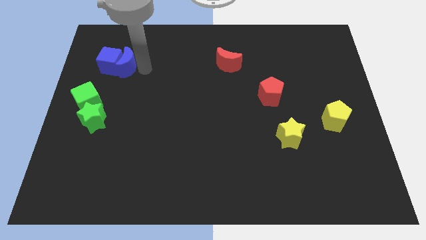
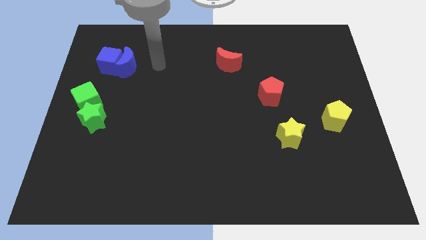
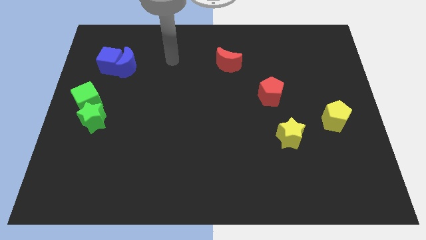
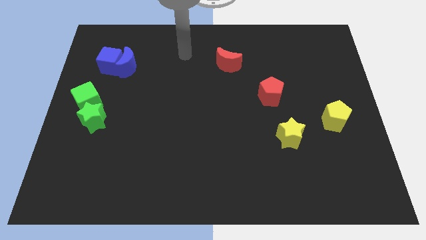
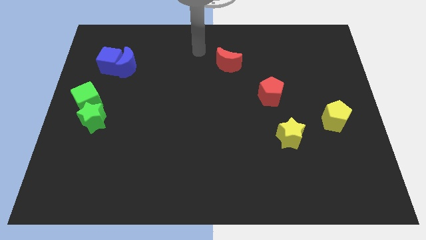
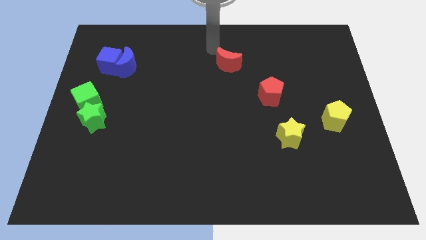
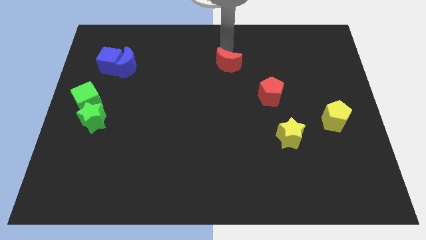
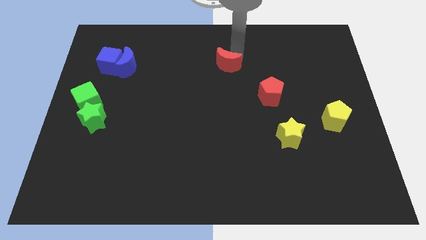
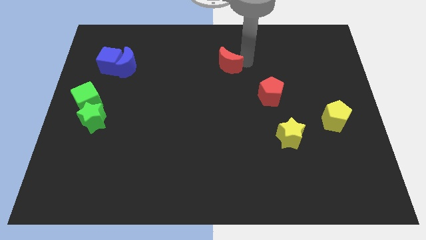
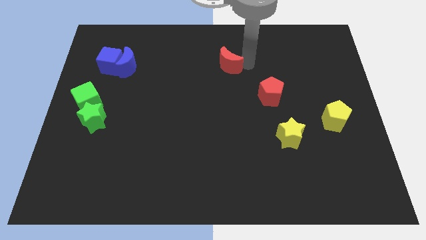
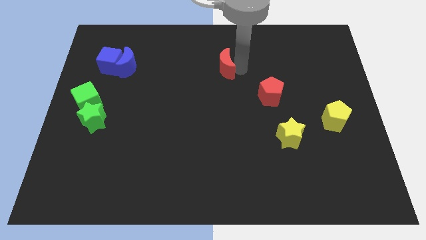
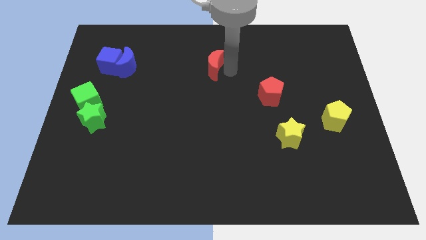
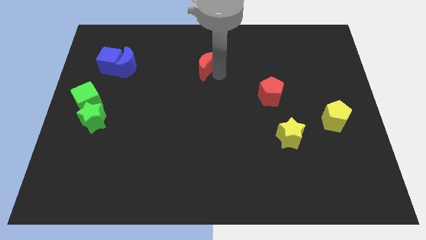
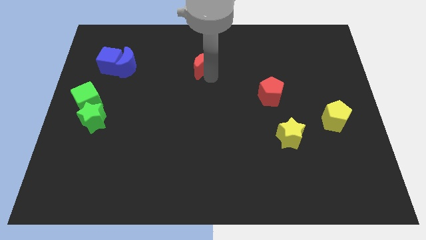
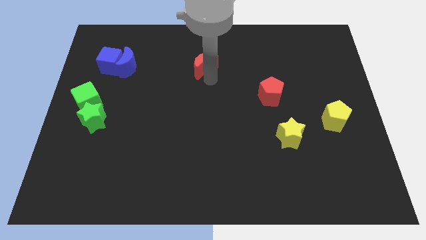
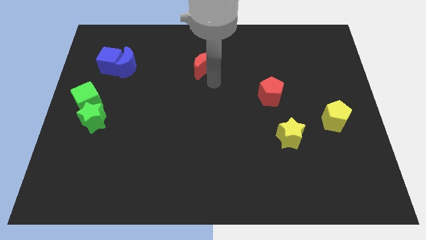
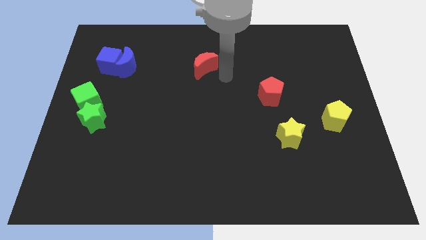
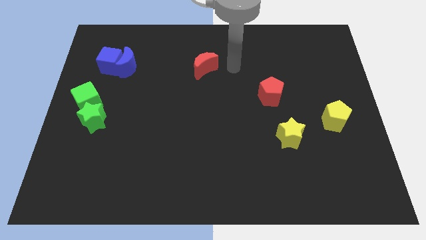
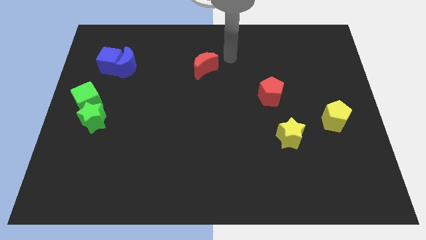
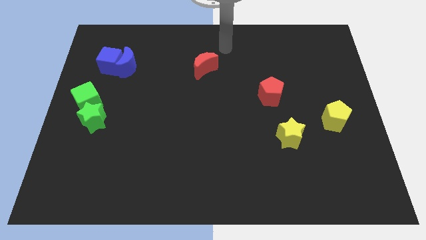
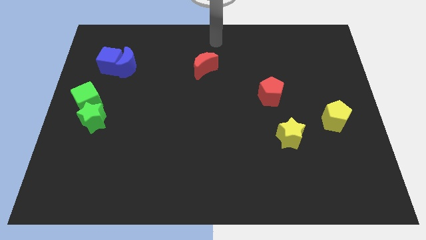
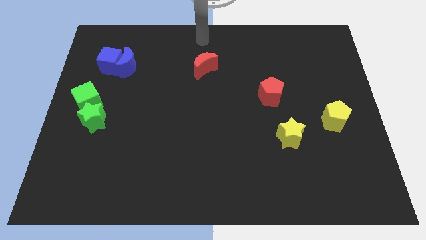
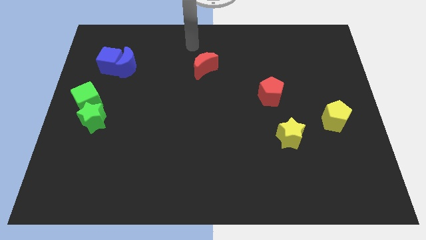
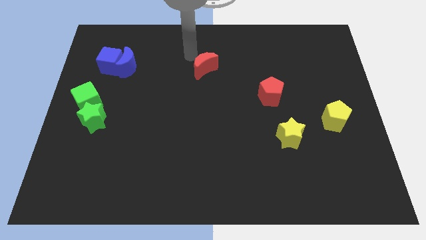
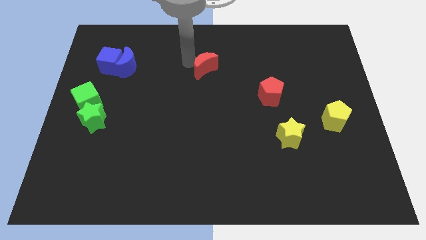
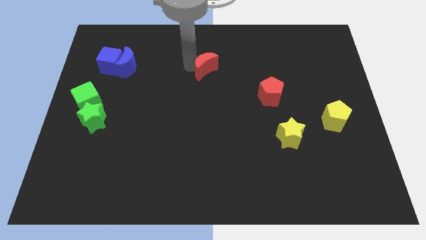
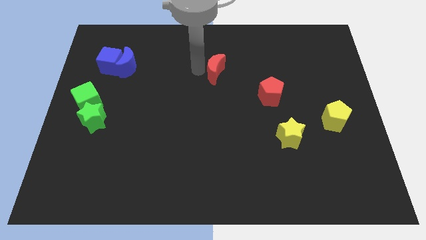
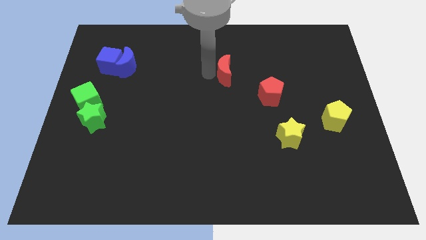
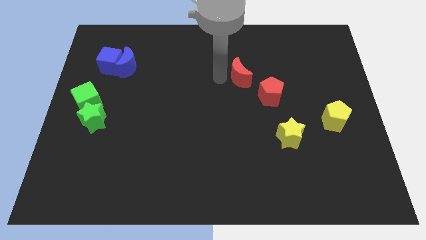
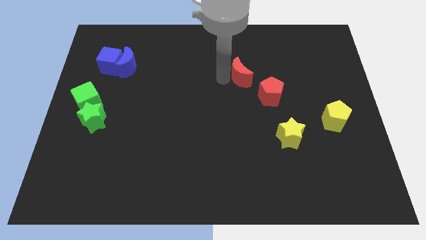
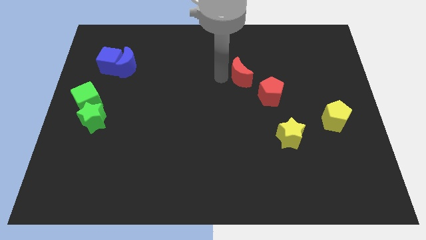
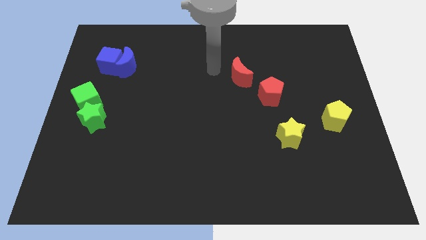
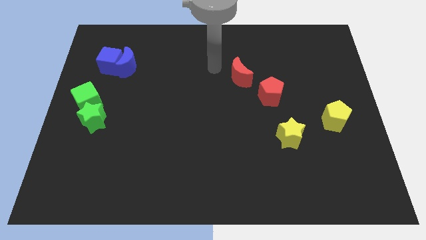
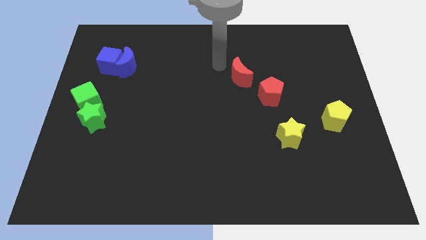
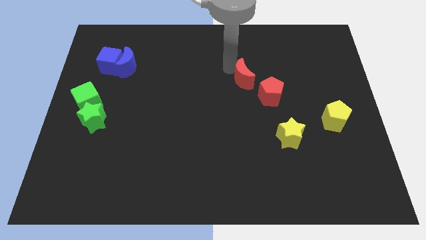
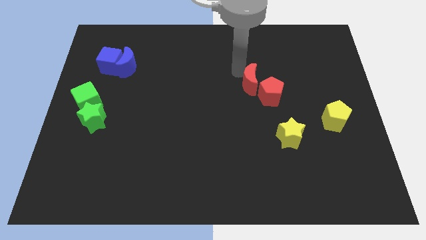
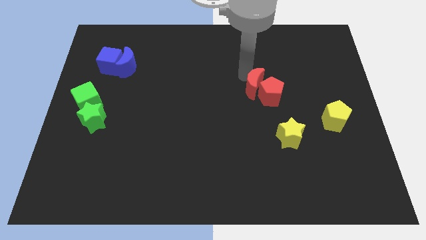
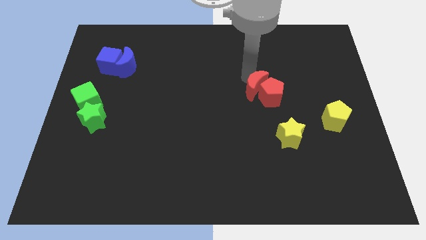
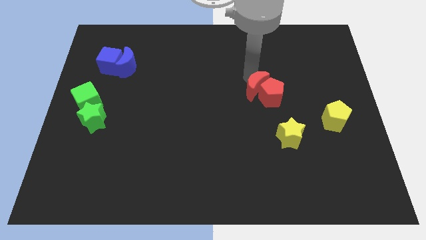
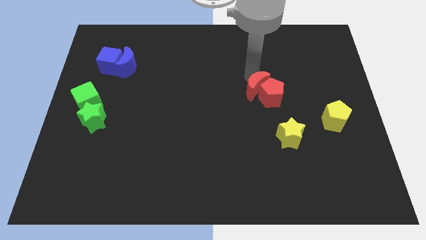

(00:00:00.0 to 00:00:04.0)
join the red blocks together above the yellow star

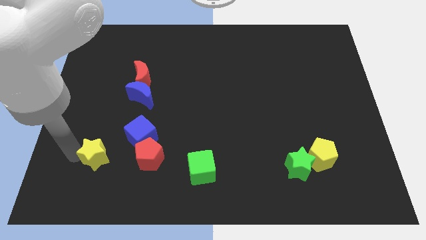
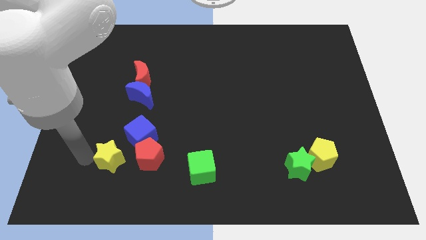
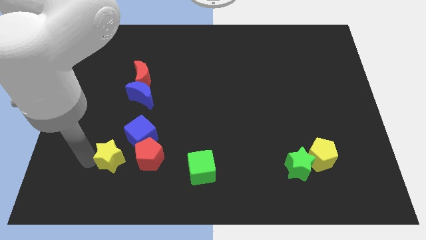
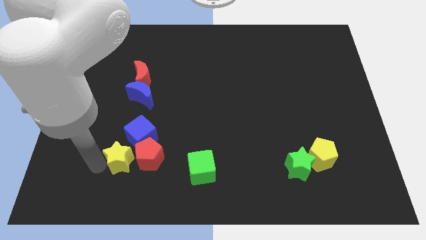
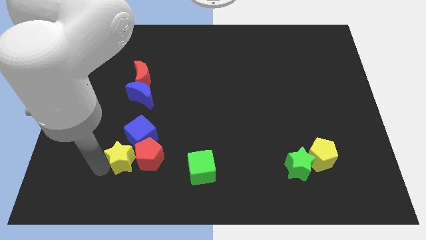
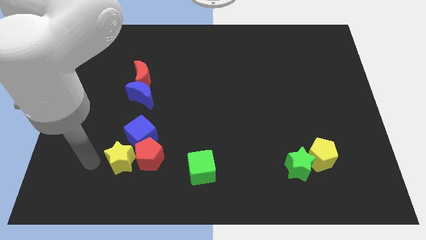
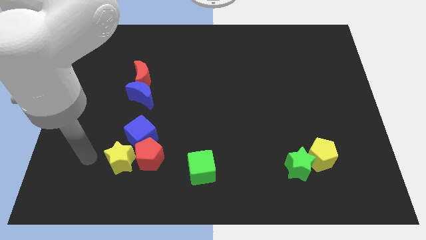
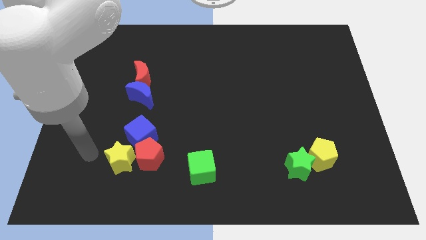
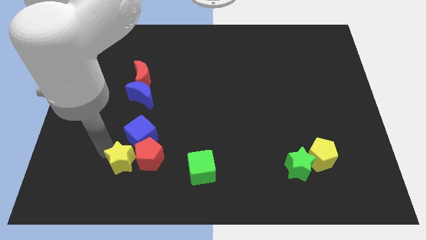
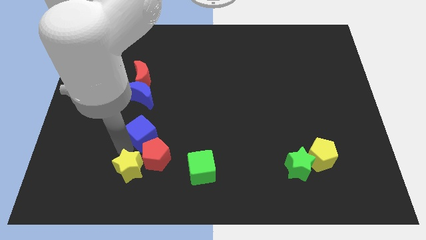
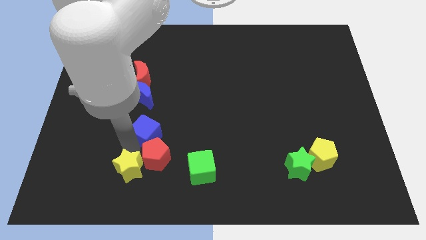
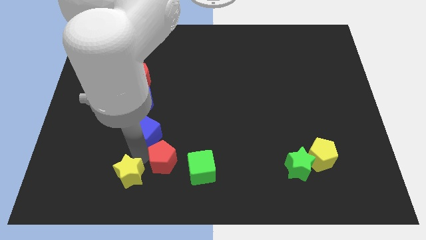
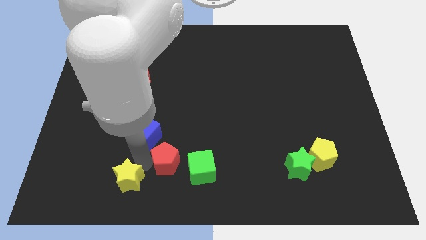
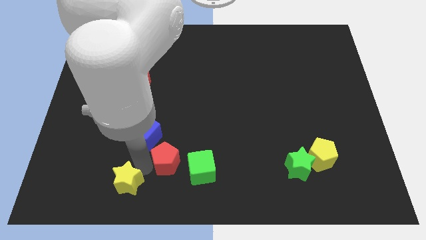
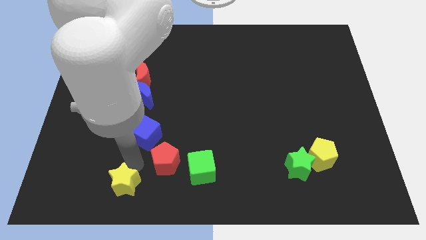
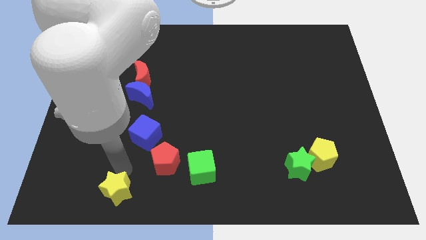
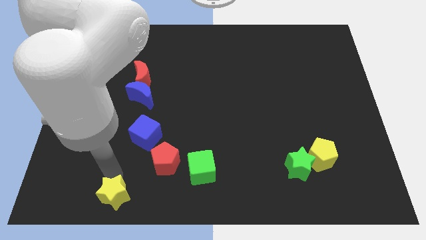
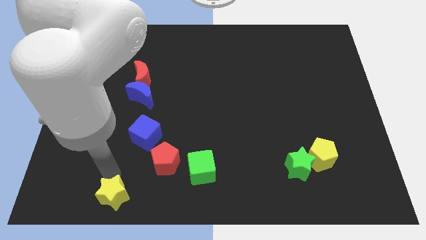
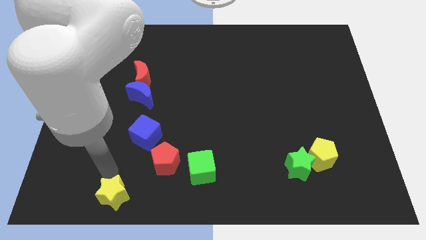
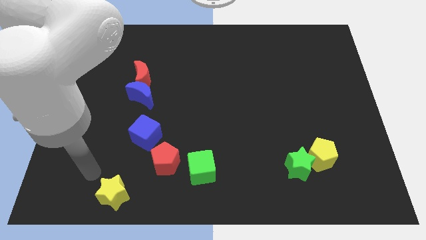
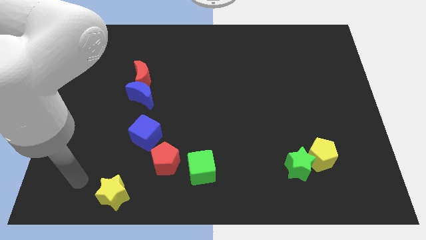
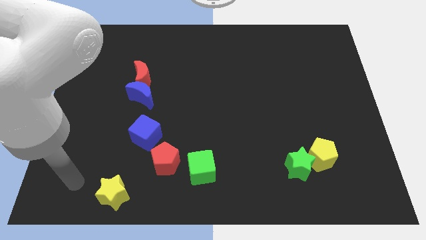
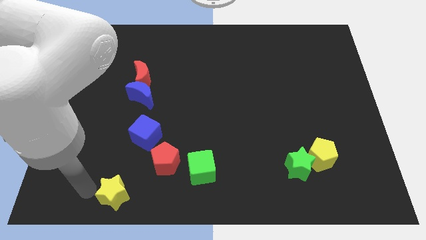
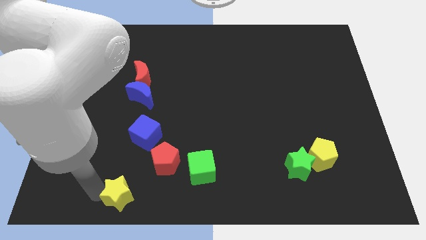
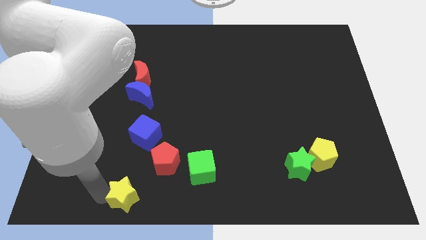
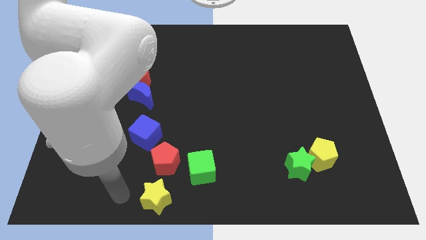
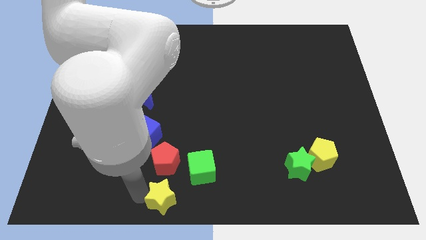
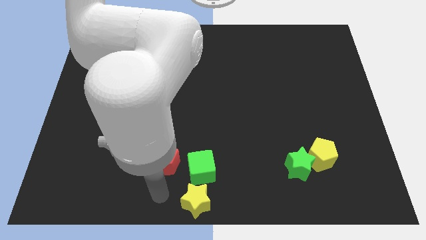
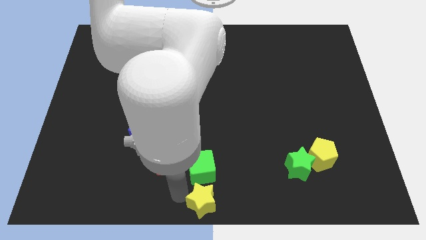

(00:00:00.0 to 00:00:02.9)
push yellow star to the bottom center of the board

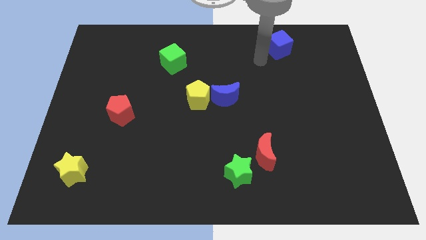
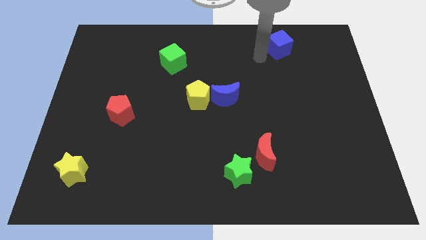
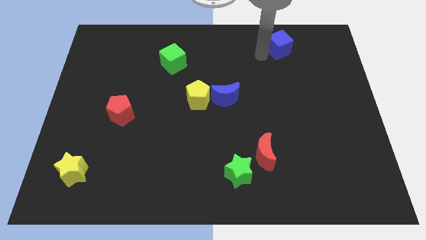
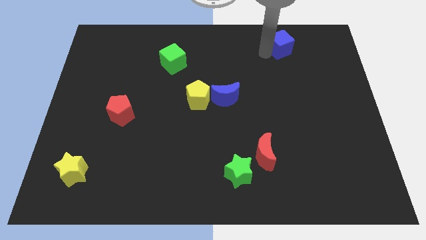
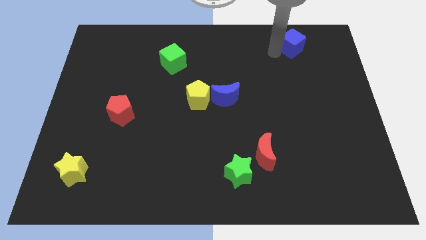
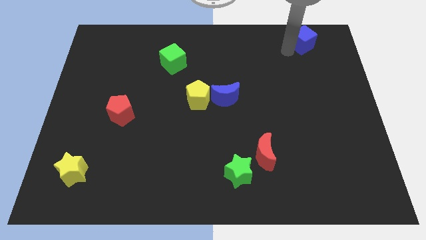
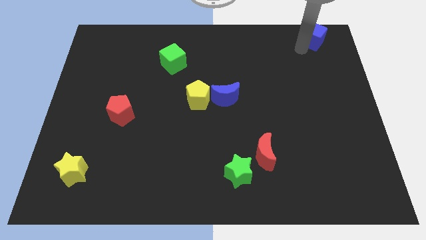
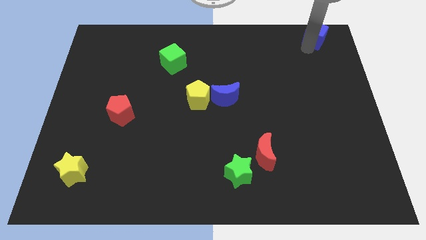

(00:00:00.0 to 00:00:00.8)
move blue cube to top right corner

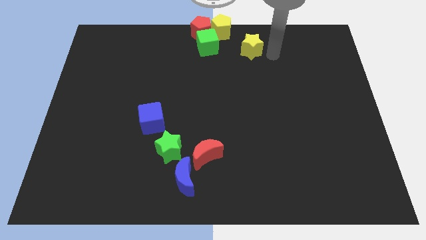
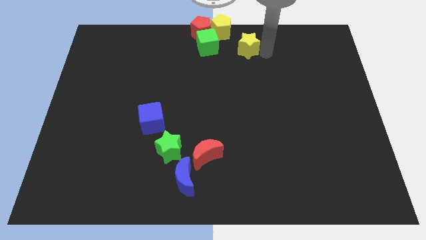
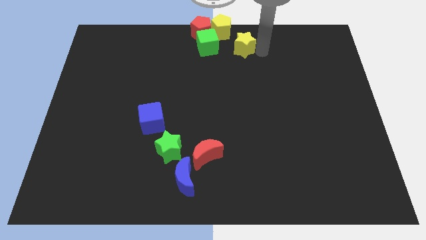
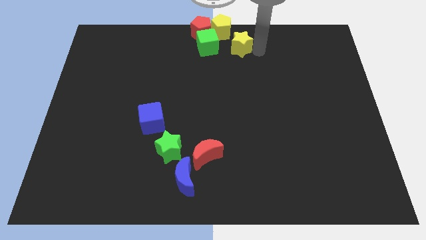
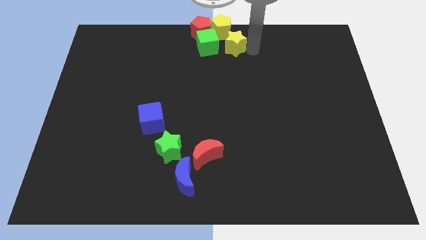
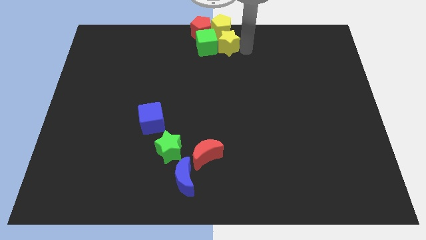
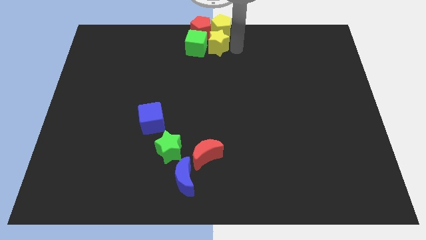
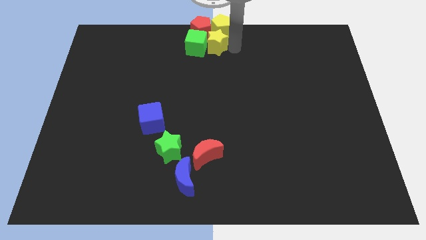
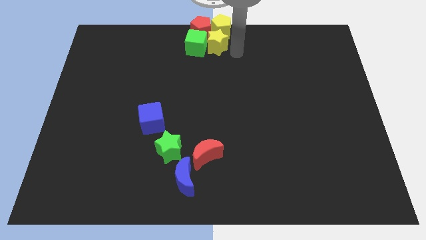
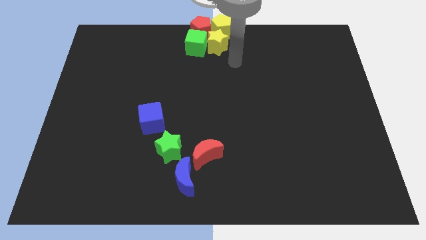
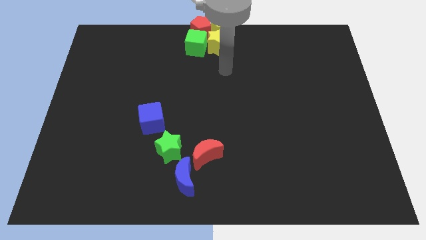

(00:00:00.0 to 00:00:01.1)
push the yellow star into the green cube

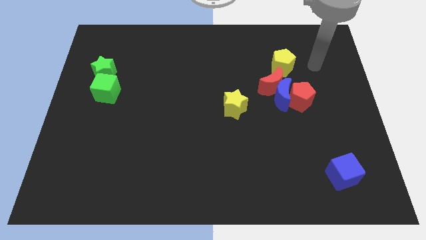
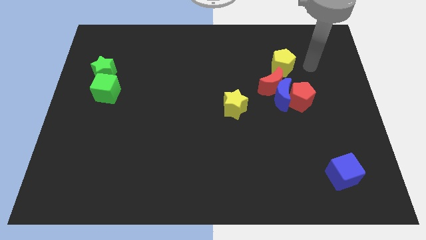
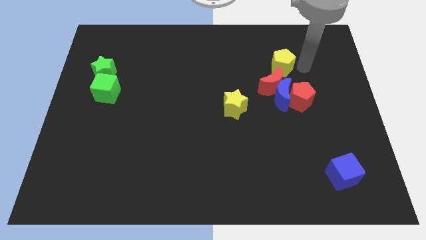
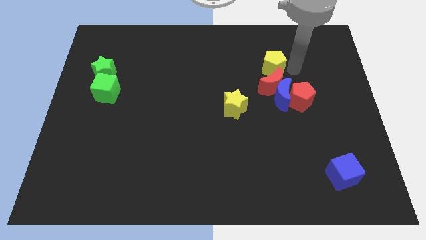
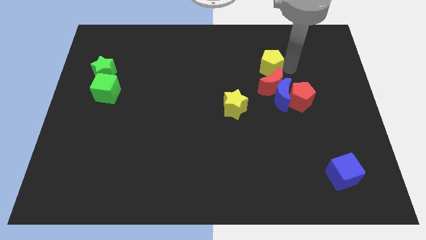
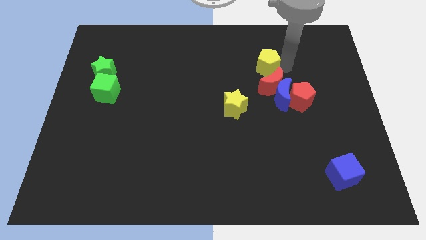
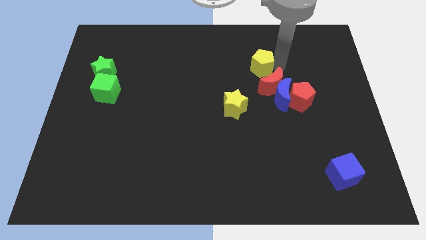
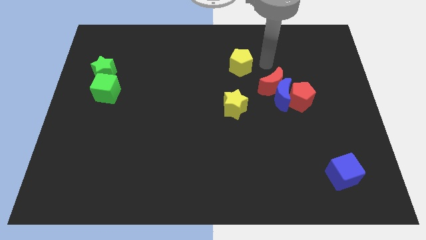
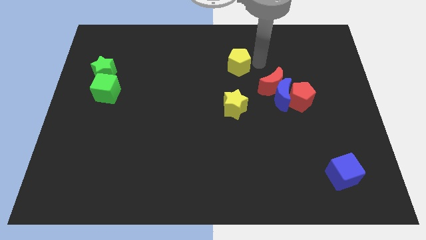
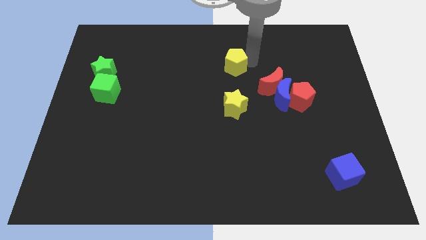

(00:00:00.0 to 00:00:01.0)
separate the yellow pentagon away from the red crescent
